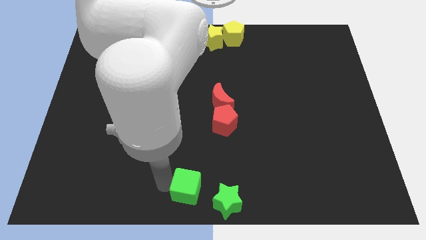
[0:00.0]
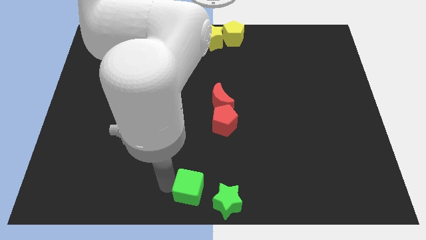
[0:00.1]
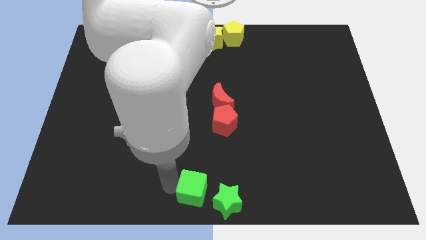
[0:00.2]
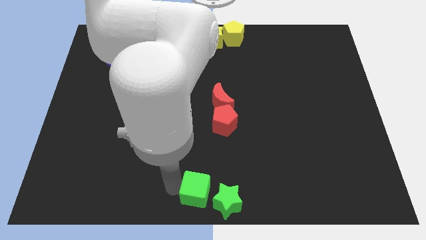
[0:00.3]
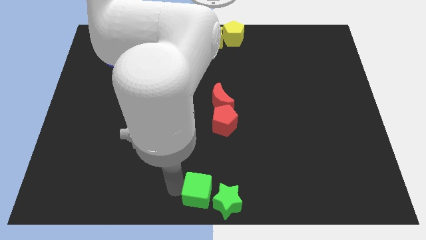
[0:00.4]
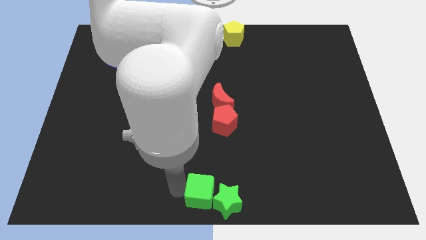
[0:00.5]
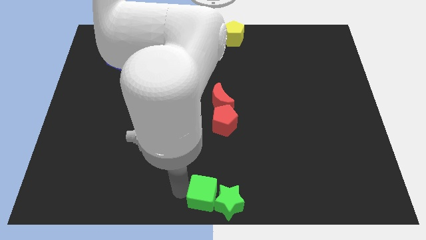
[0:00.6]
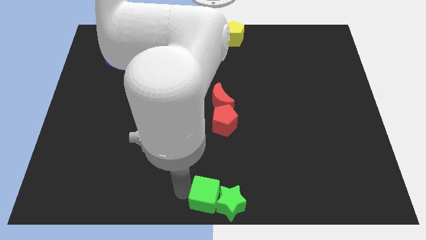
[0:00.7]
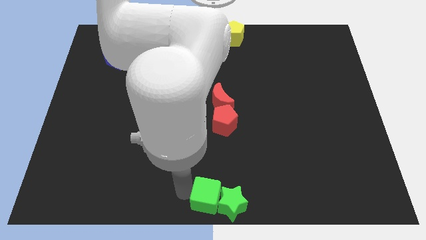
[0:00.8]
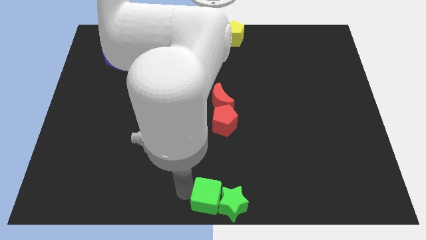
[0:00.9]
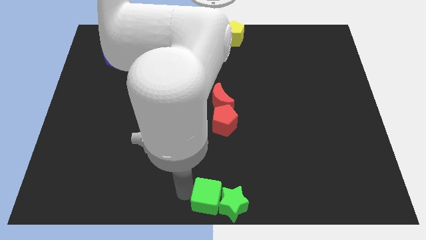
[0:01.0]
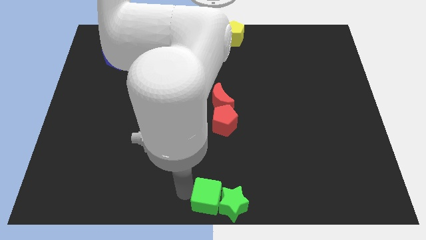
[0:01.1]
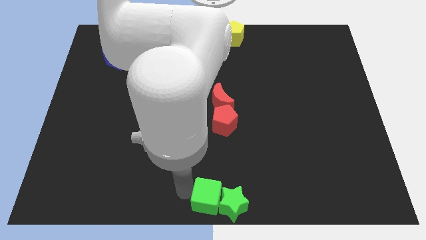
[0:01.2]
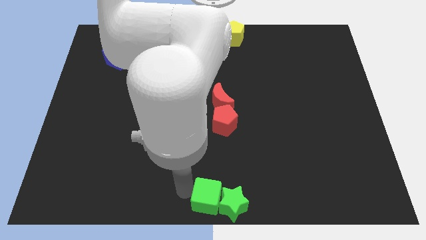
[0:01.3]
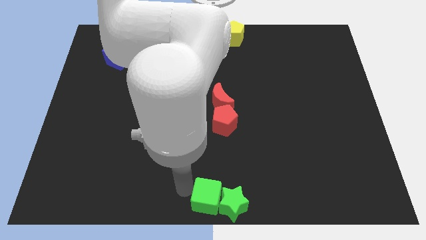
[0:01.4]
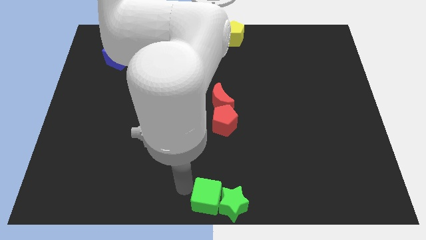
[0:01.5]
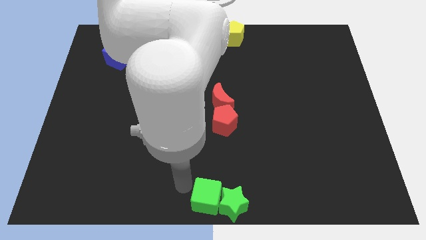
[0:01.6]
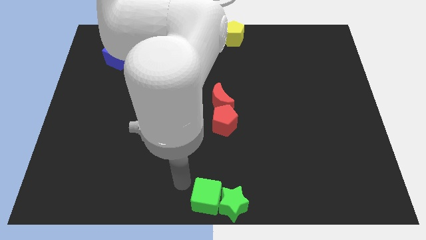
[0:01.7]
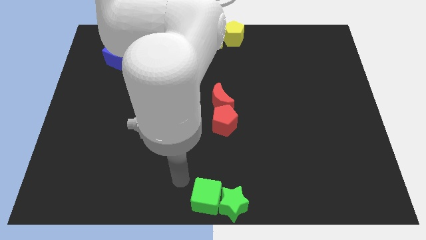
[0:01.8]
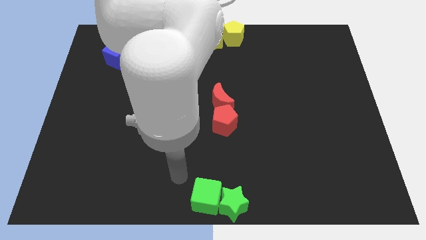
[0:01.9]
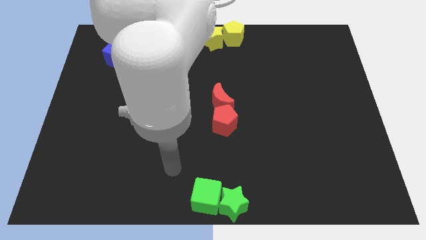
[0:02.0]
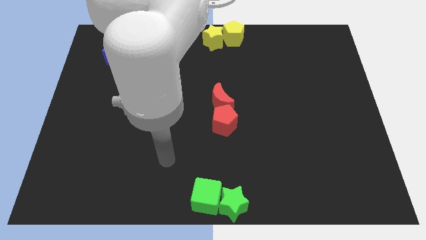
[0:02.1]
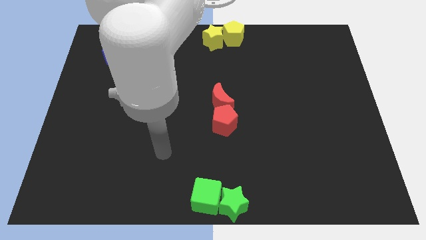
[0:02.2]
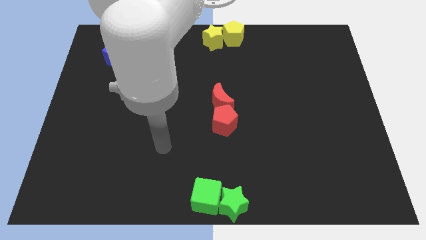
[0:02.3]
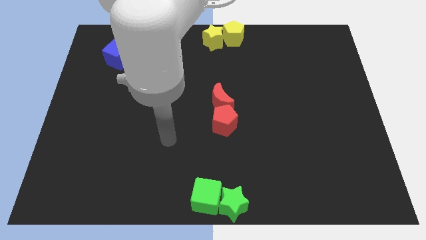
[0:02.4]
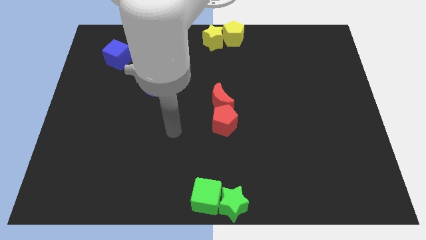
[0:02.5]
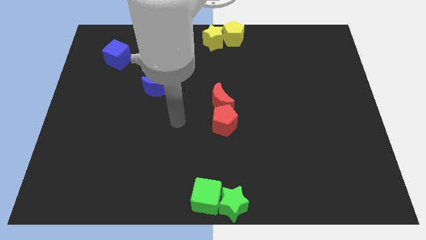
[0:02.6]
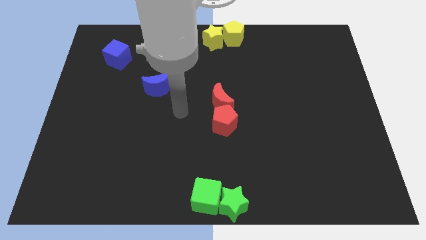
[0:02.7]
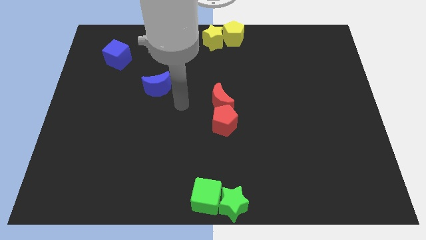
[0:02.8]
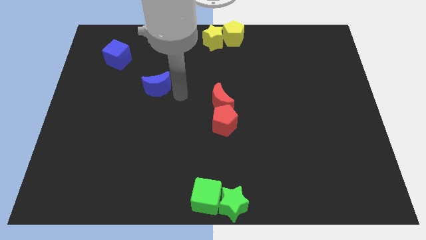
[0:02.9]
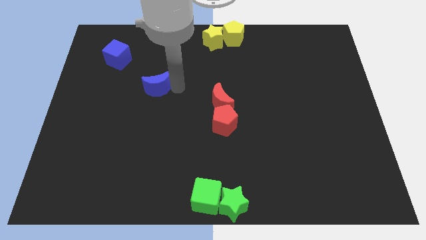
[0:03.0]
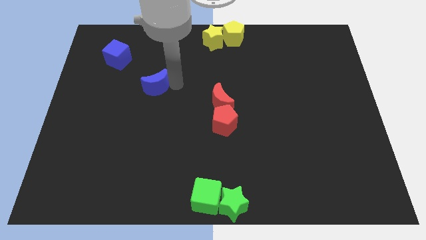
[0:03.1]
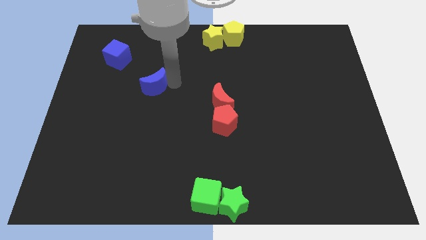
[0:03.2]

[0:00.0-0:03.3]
move your arm towards the blue crescent

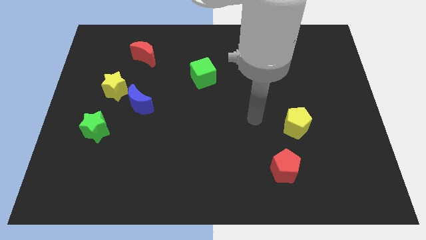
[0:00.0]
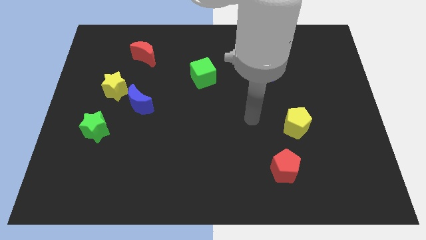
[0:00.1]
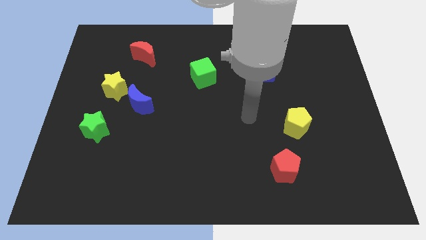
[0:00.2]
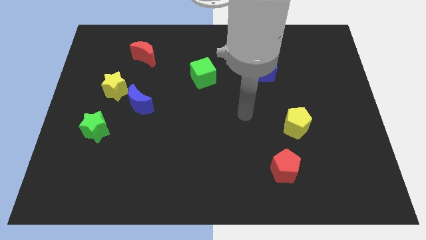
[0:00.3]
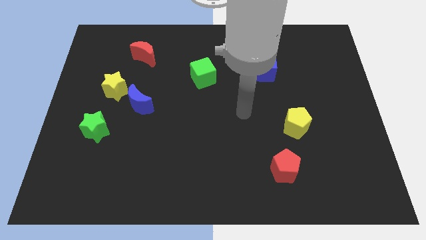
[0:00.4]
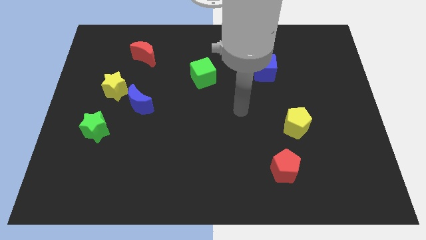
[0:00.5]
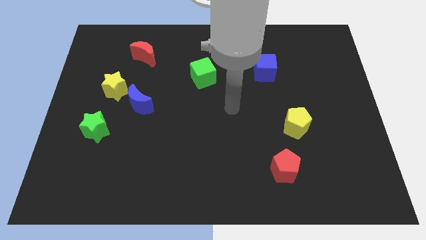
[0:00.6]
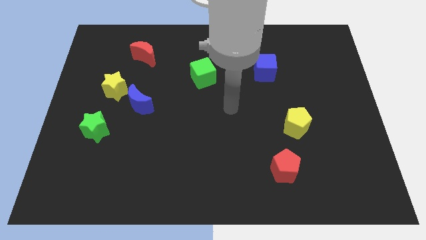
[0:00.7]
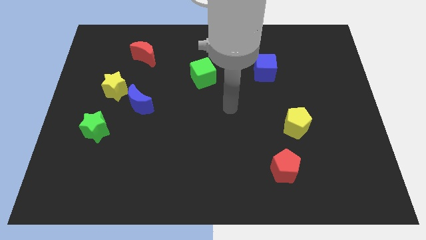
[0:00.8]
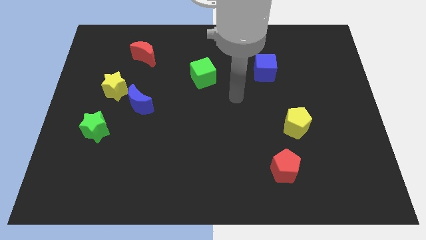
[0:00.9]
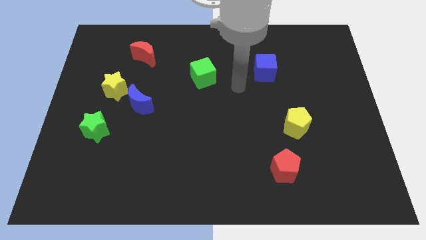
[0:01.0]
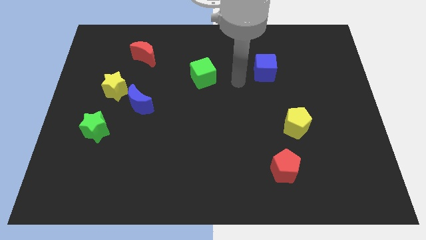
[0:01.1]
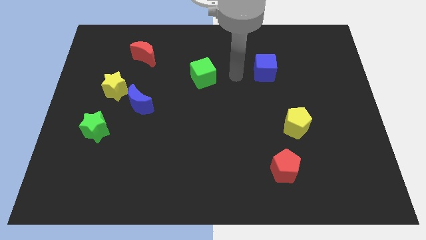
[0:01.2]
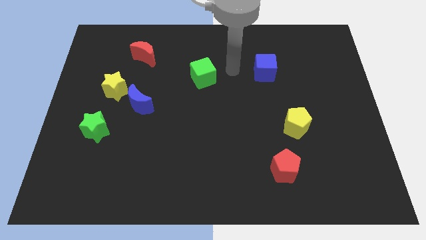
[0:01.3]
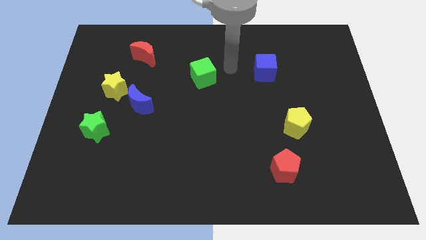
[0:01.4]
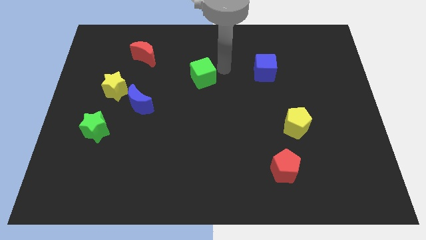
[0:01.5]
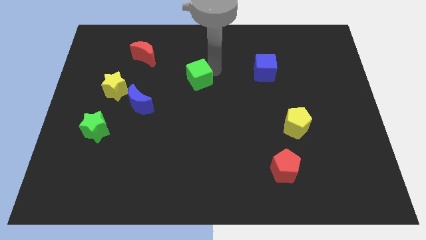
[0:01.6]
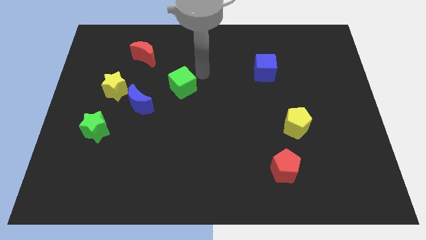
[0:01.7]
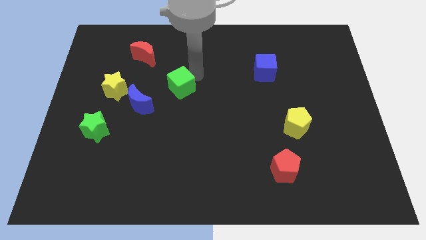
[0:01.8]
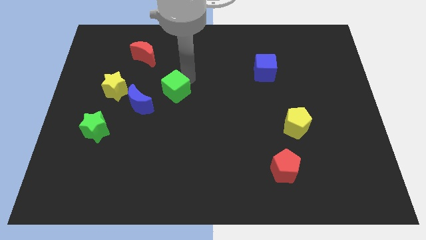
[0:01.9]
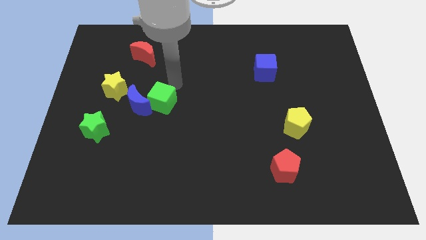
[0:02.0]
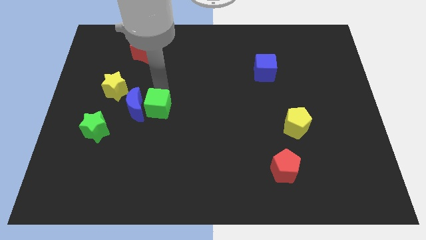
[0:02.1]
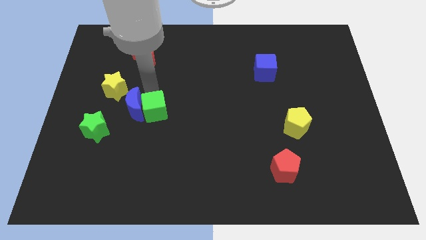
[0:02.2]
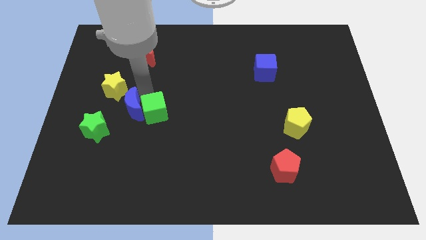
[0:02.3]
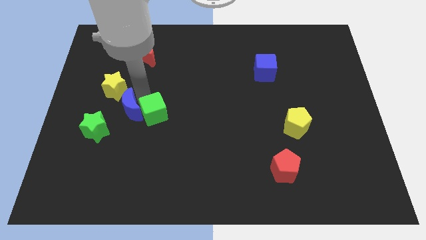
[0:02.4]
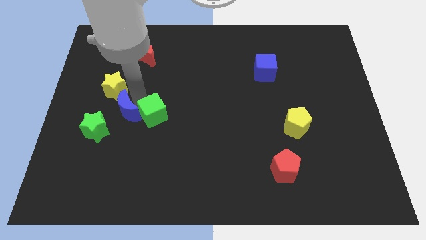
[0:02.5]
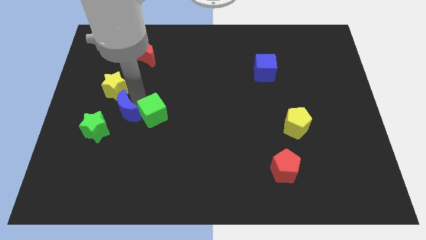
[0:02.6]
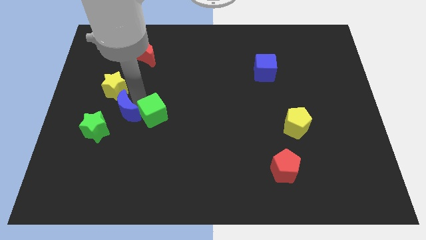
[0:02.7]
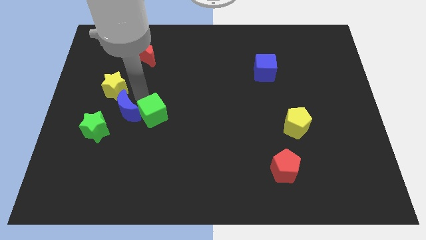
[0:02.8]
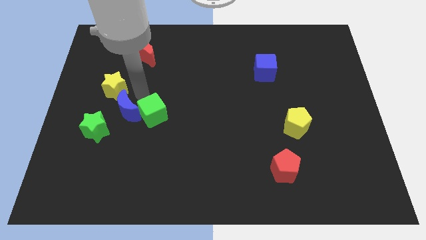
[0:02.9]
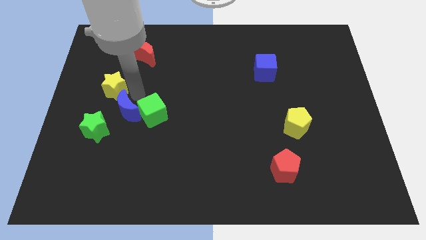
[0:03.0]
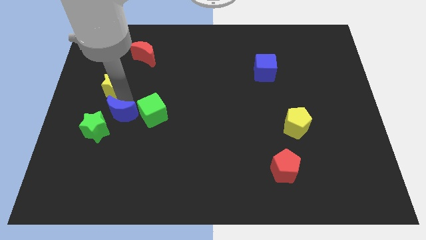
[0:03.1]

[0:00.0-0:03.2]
move the green cube to right side of the blue moon

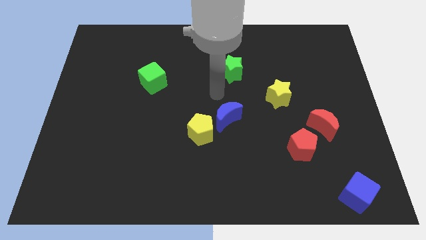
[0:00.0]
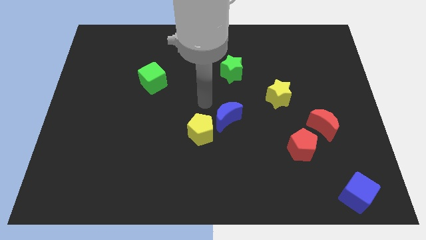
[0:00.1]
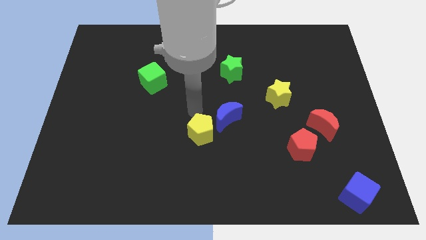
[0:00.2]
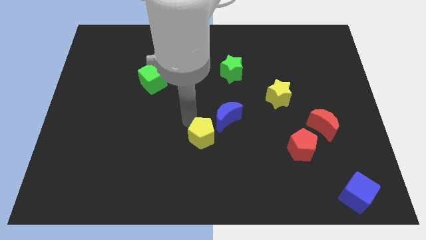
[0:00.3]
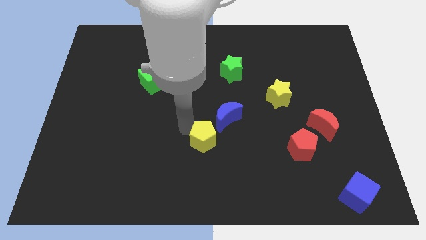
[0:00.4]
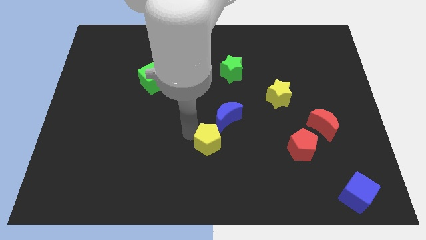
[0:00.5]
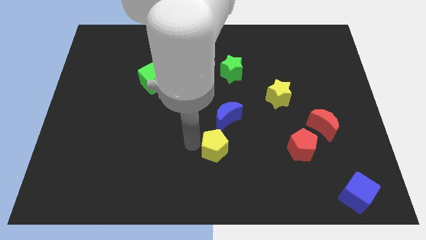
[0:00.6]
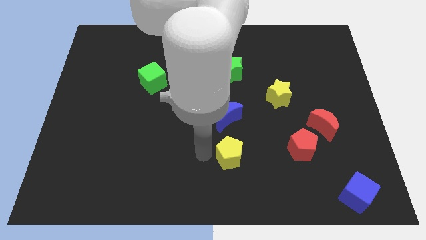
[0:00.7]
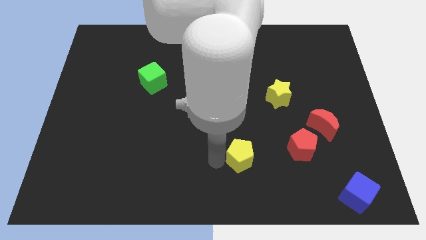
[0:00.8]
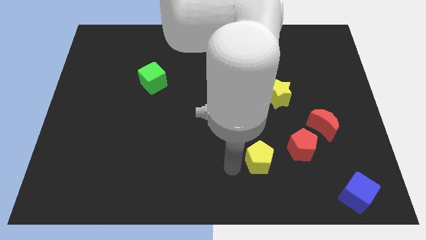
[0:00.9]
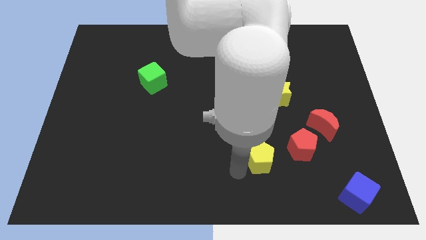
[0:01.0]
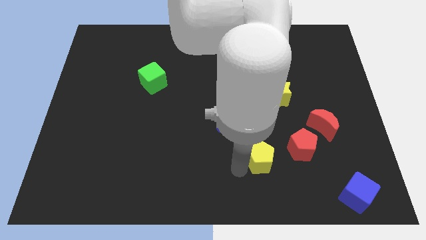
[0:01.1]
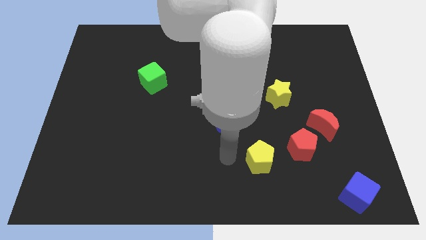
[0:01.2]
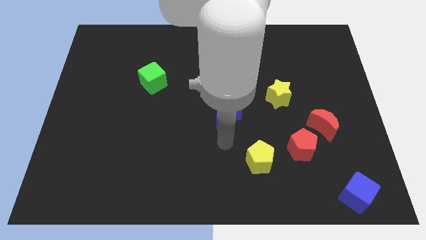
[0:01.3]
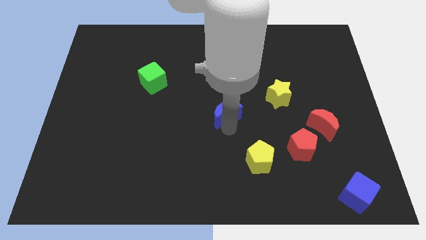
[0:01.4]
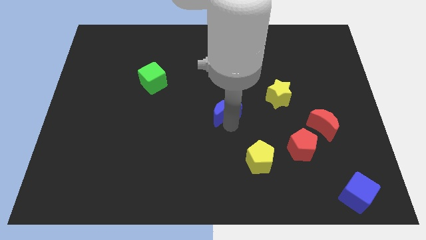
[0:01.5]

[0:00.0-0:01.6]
push the yellow pentagon to the bottom right of the blue crescent

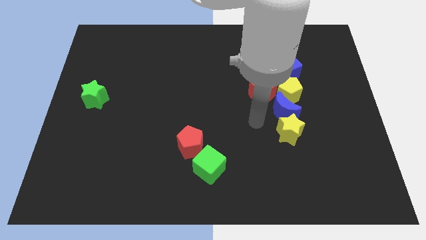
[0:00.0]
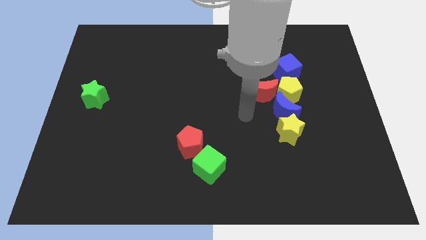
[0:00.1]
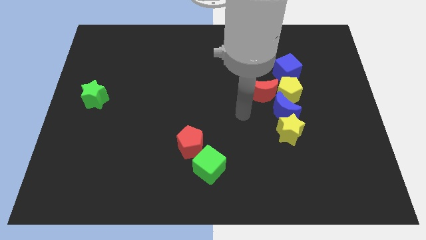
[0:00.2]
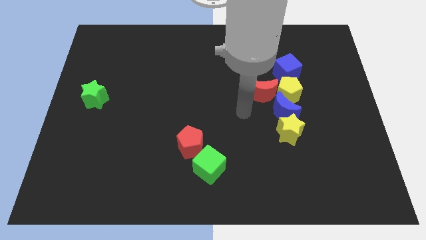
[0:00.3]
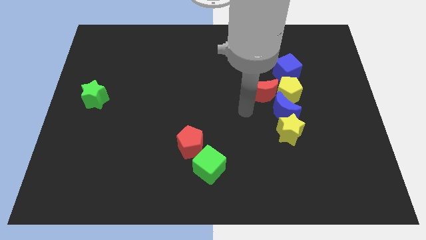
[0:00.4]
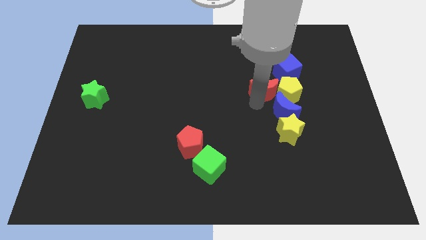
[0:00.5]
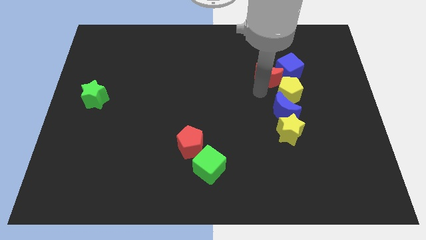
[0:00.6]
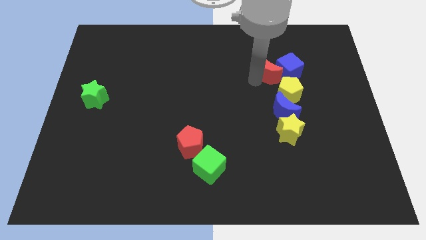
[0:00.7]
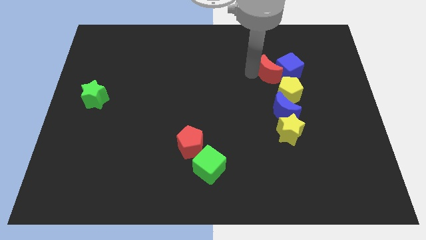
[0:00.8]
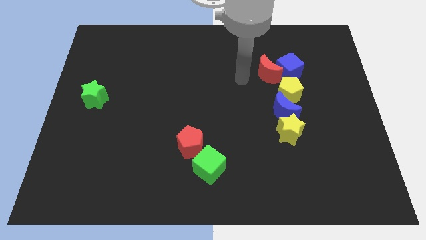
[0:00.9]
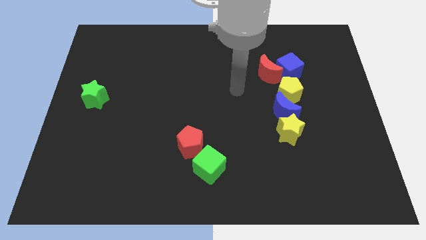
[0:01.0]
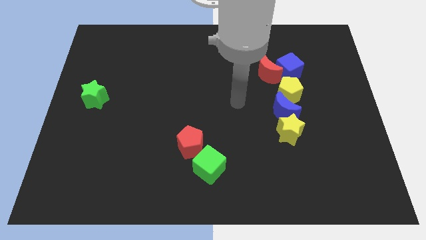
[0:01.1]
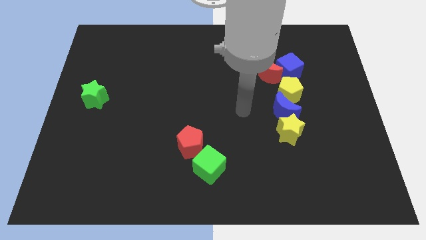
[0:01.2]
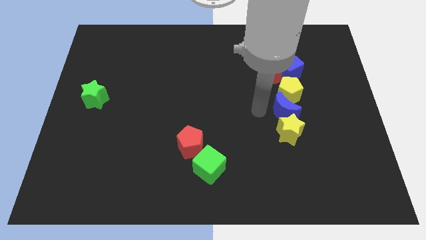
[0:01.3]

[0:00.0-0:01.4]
place red moon to the left of blue cube
